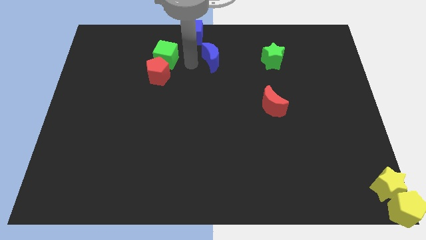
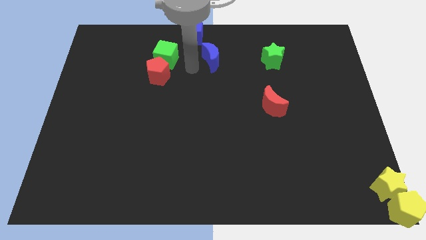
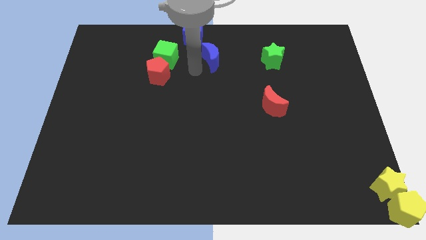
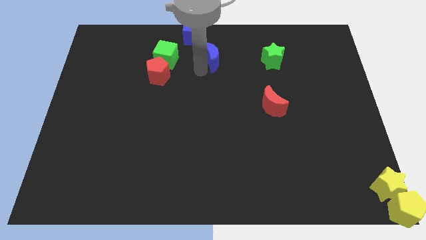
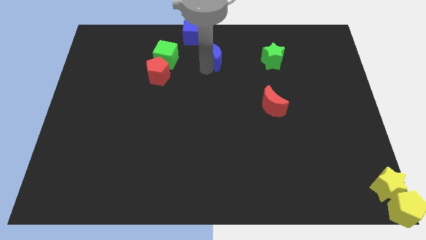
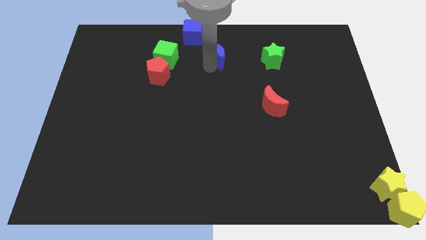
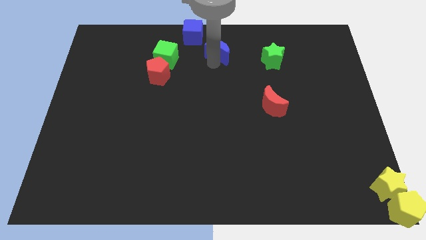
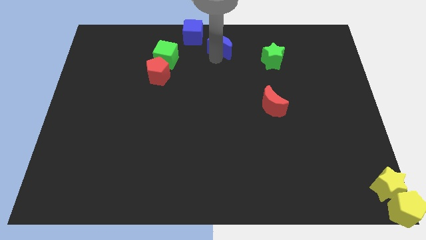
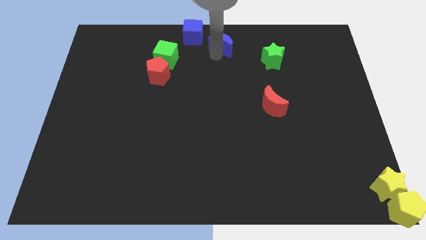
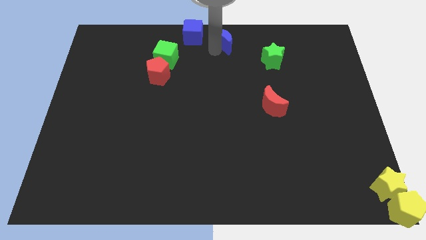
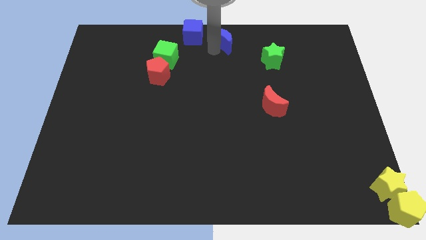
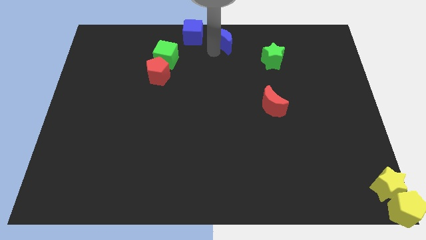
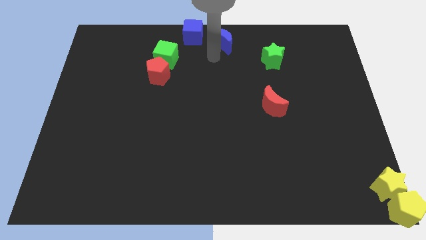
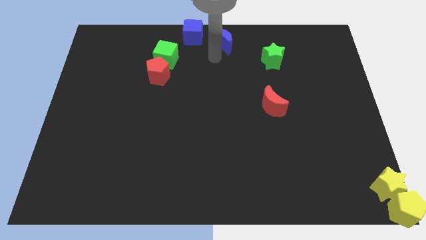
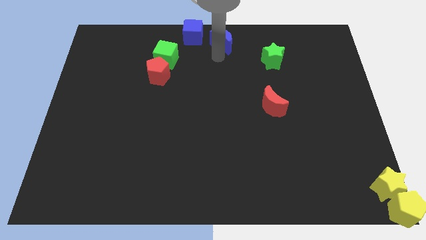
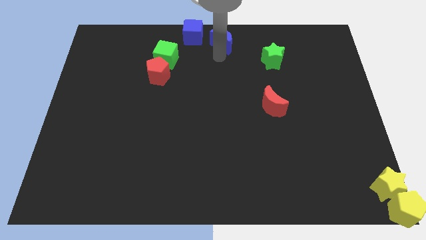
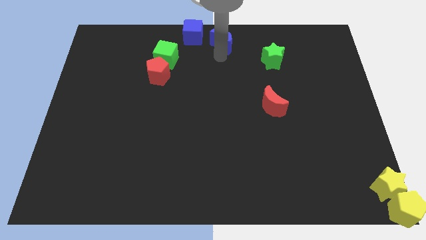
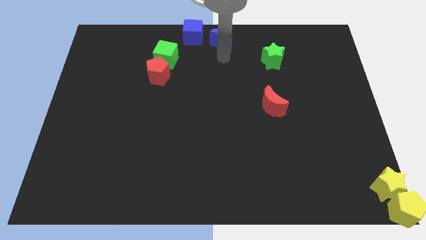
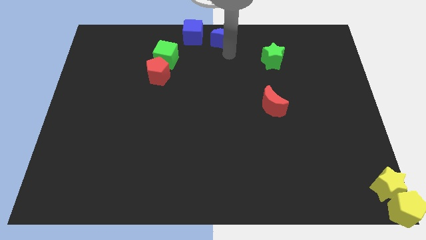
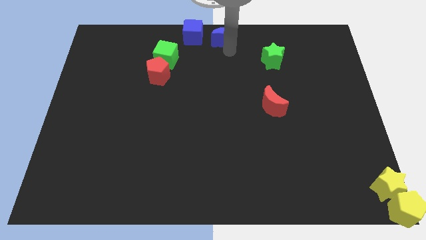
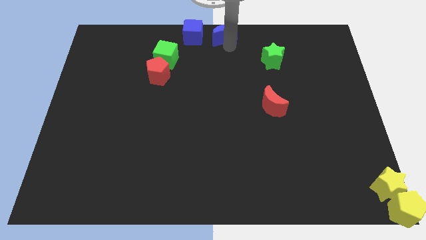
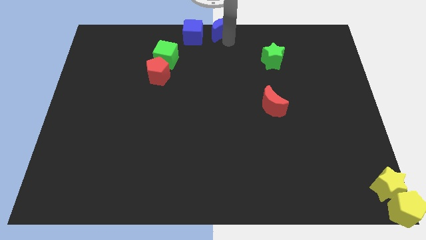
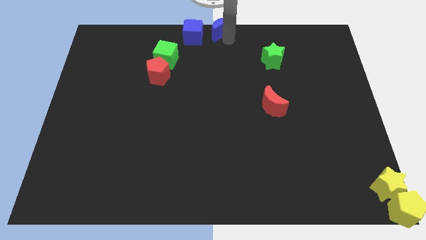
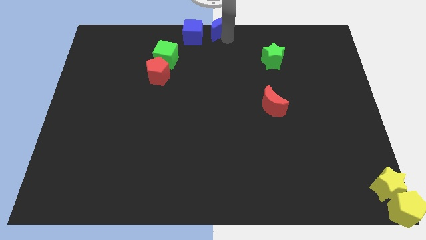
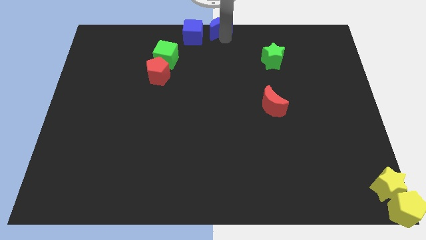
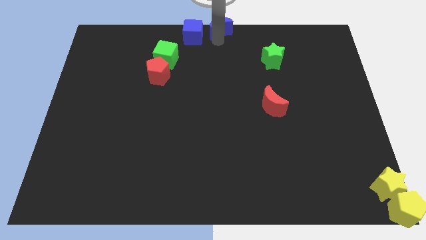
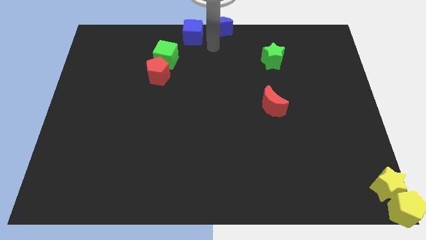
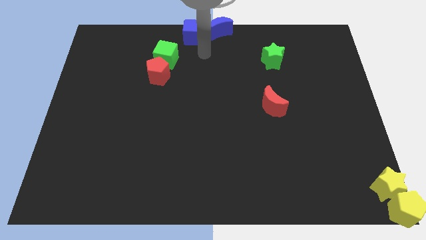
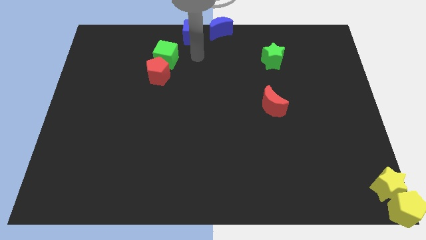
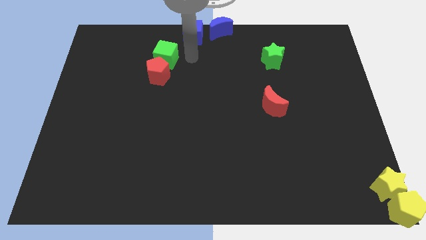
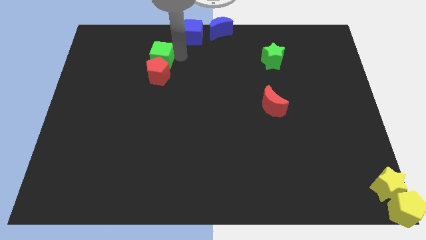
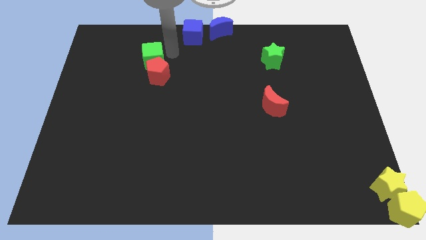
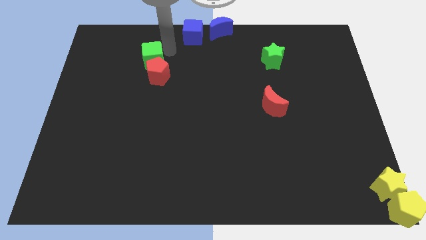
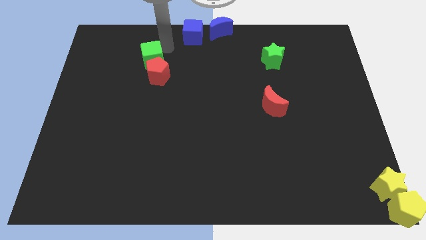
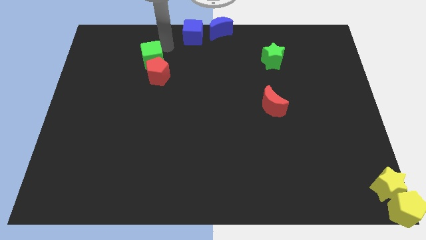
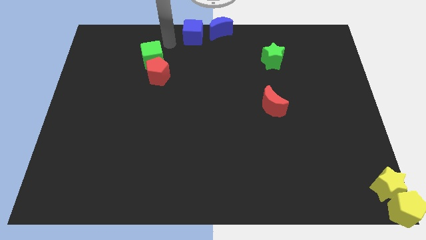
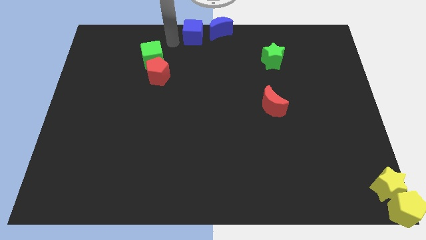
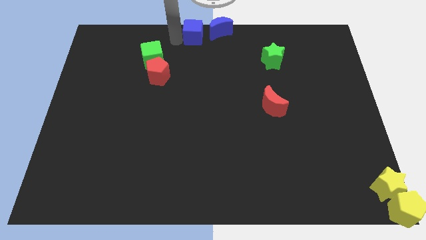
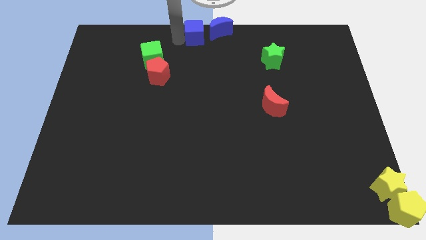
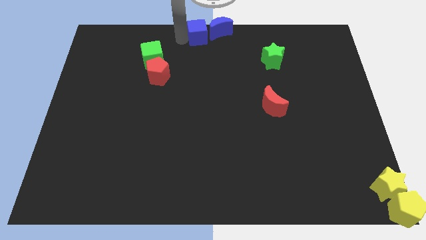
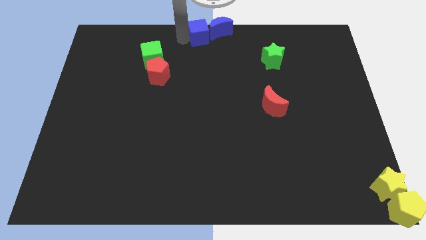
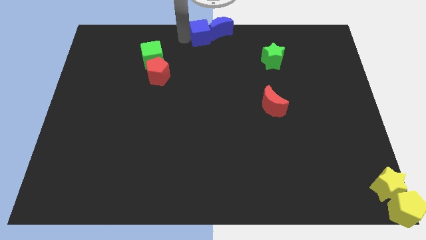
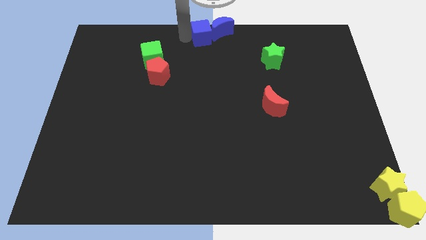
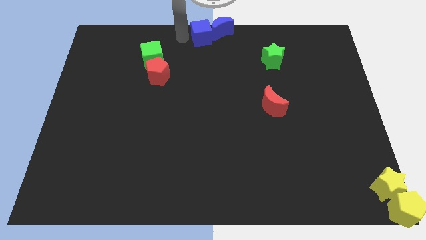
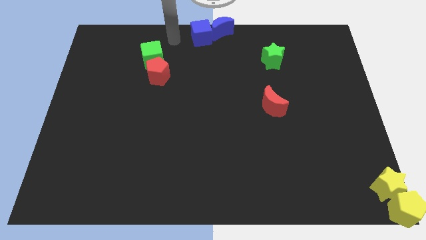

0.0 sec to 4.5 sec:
move blue cube into blue moon

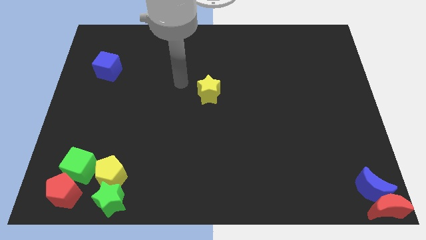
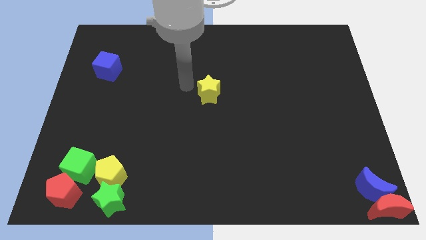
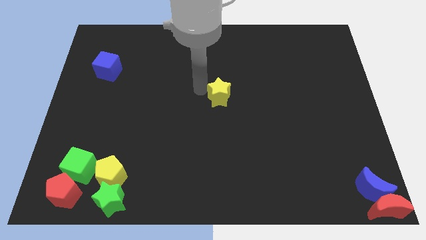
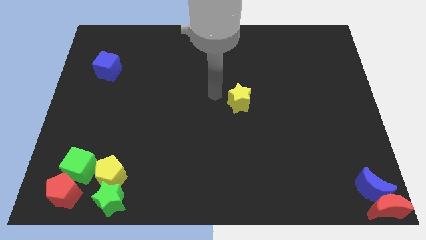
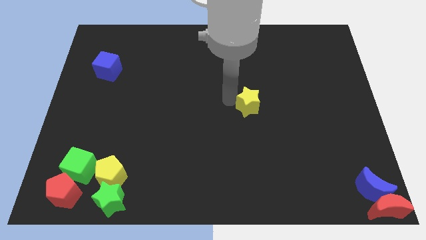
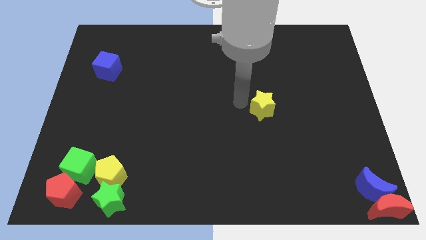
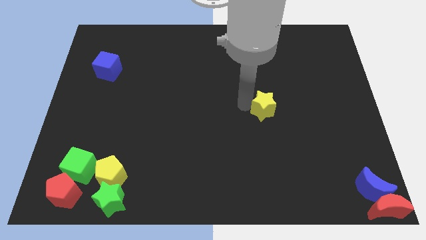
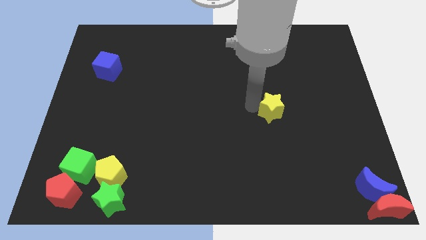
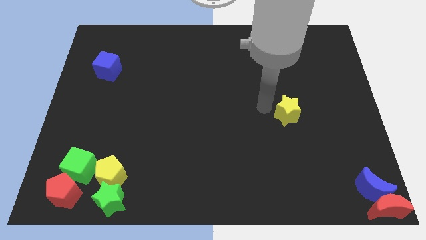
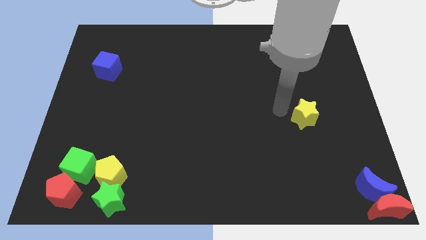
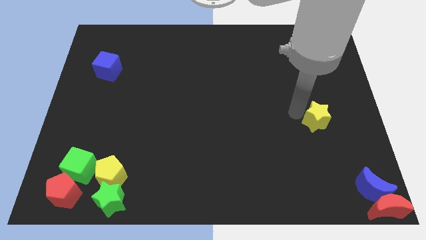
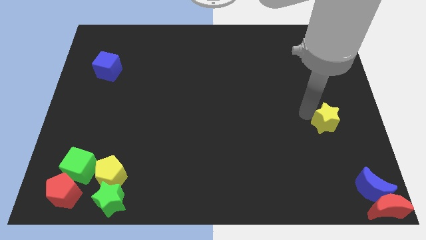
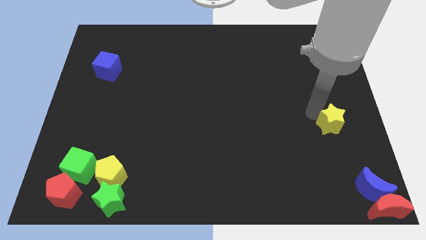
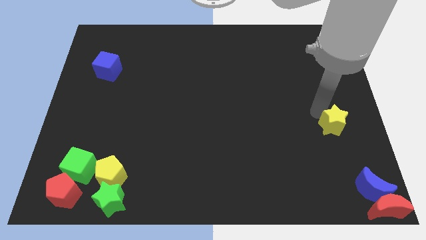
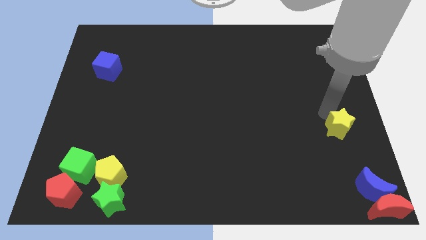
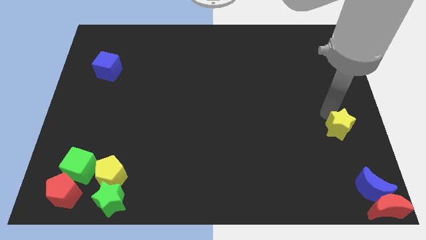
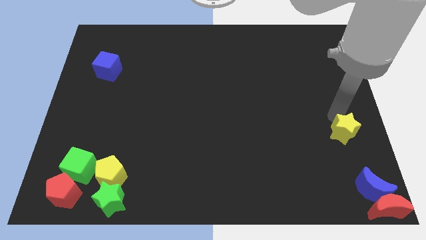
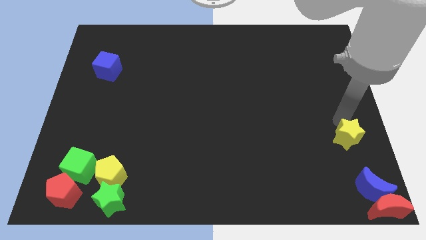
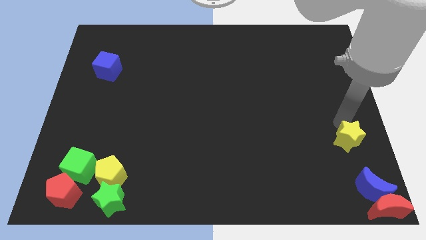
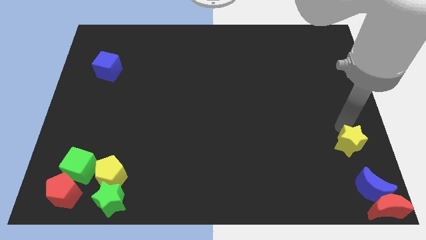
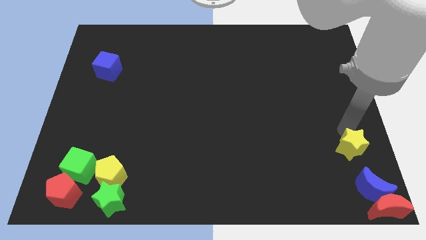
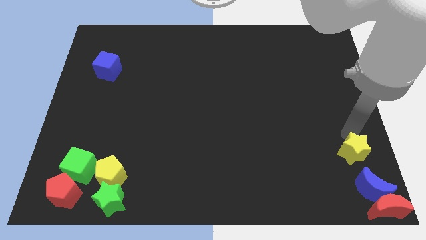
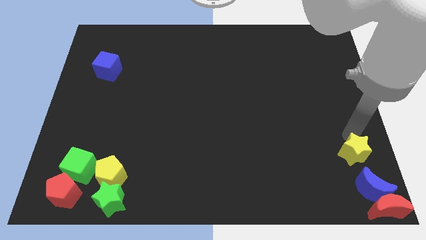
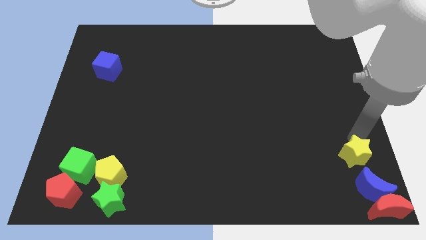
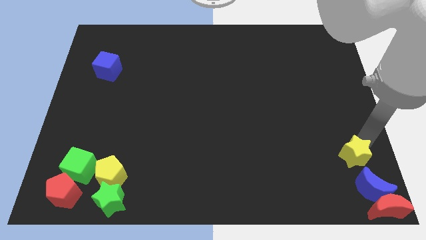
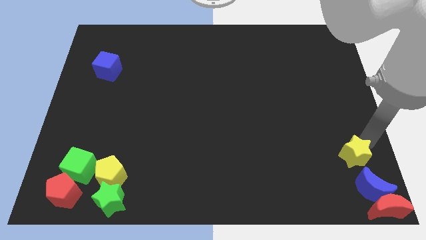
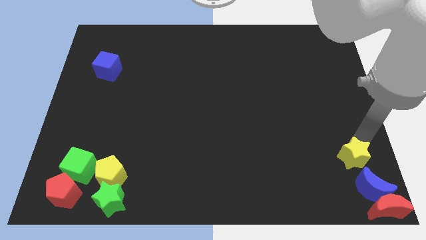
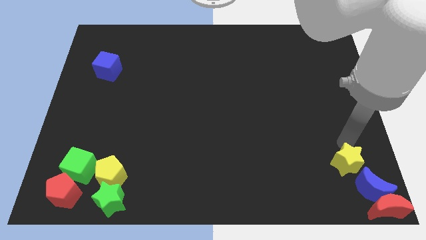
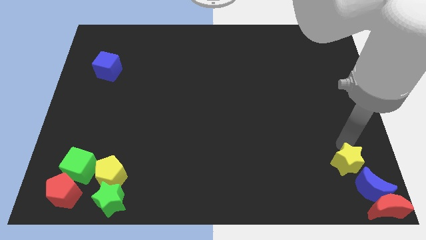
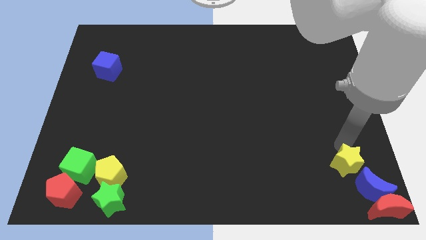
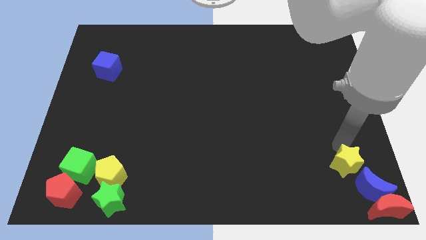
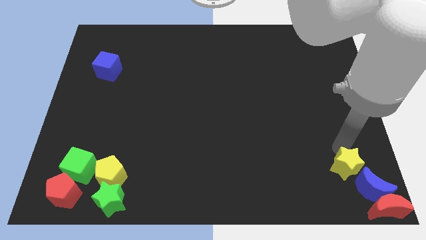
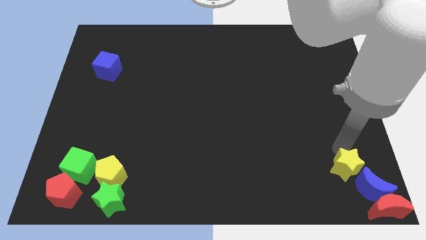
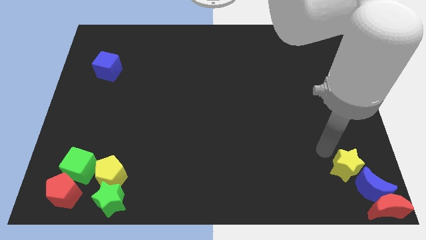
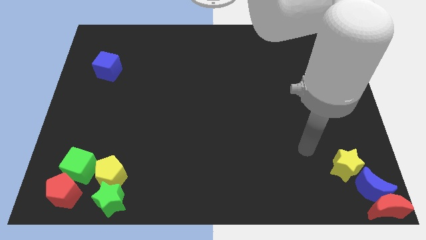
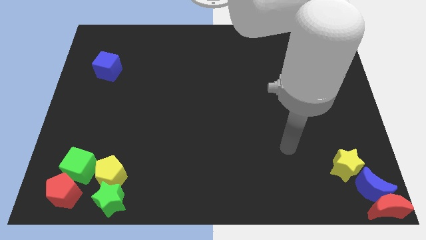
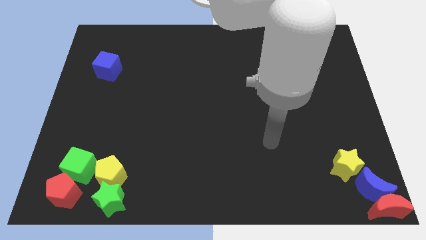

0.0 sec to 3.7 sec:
move the yellow star to the top left of the blue crescent

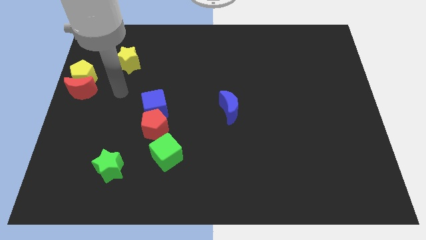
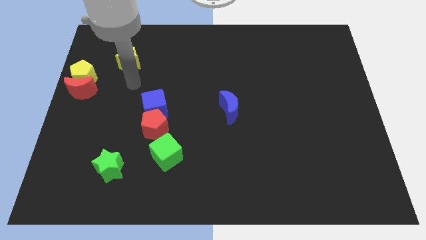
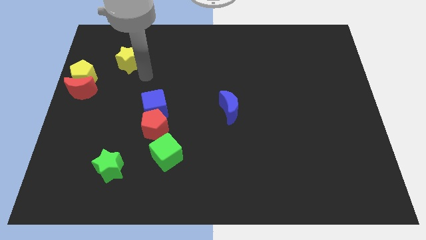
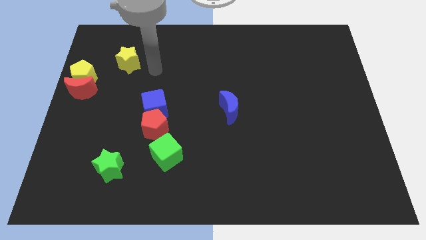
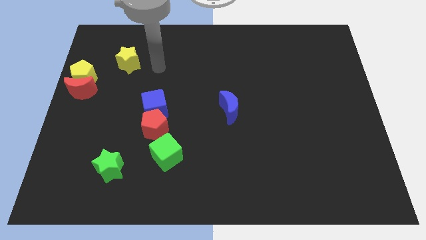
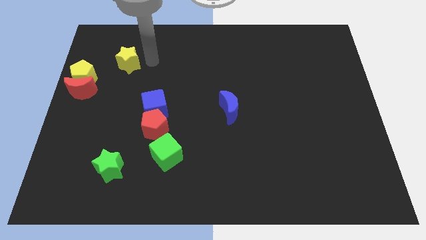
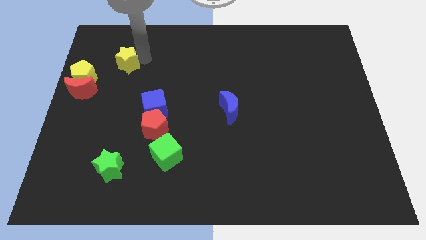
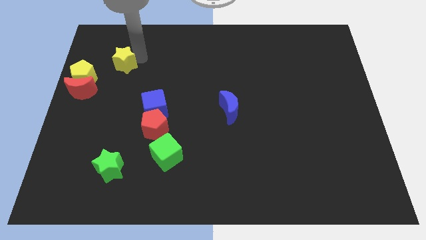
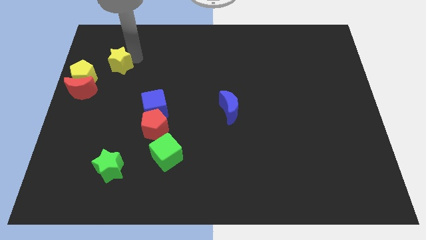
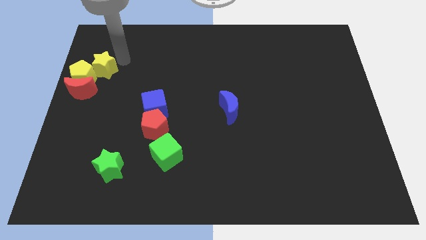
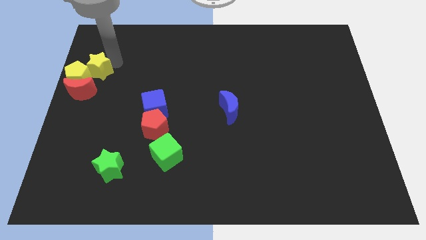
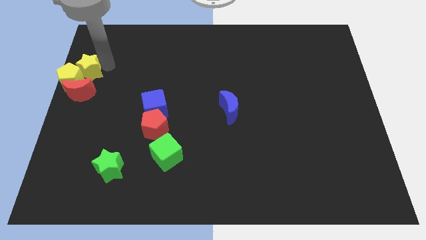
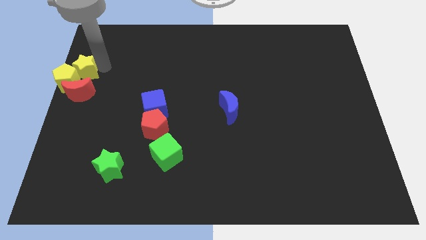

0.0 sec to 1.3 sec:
move the yellow star into the yellow pentagon
